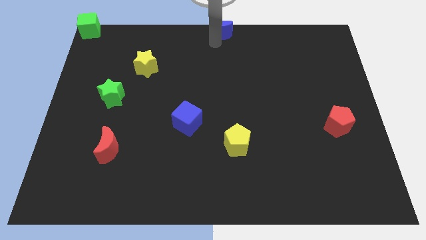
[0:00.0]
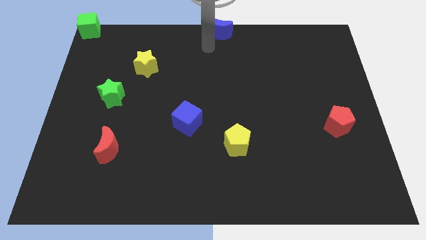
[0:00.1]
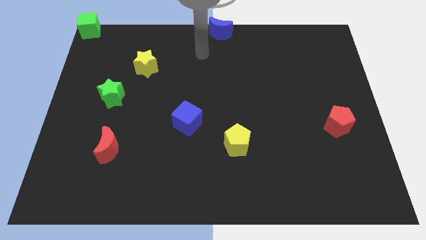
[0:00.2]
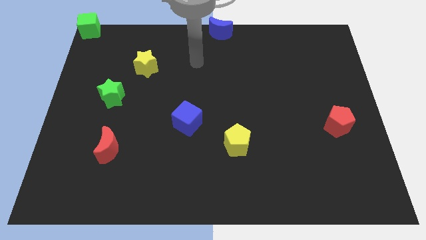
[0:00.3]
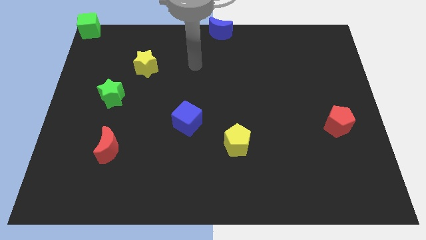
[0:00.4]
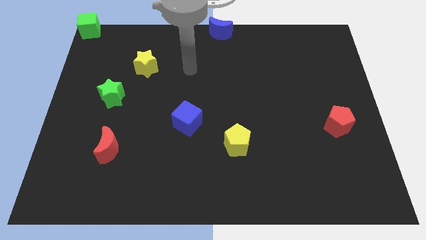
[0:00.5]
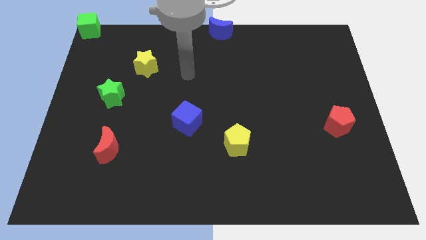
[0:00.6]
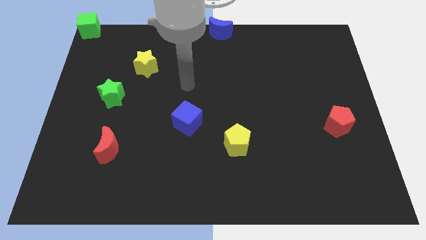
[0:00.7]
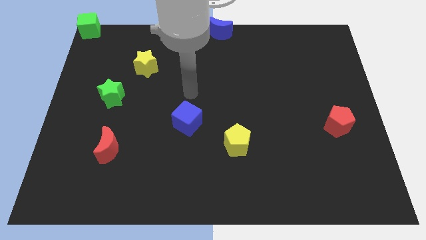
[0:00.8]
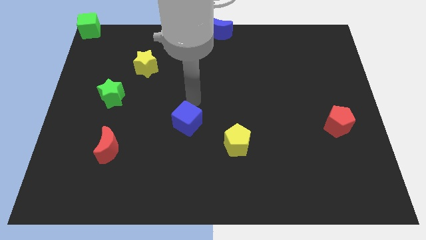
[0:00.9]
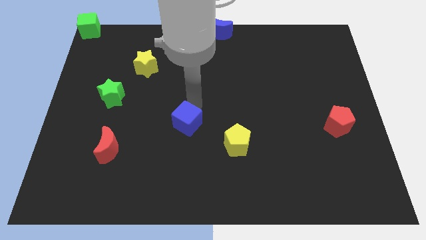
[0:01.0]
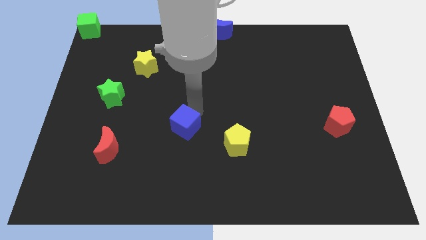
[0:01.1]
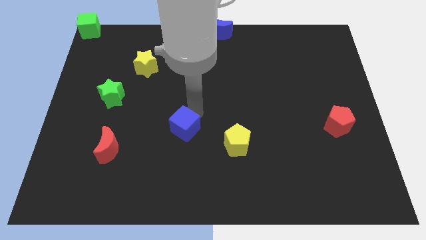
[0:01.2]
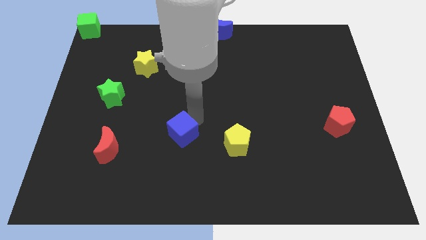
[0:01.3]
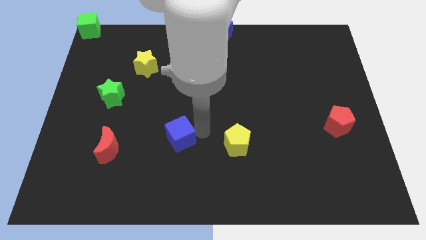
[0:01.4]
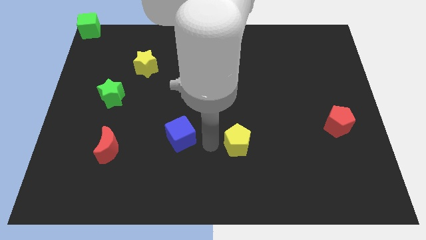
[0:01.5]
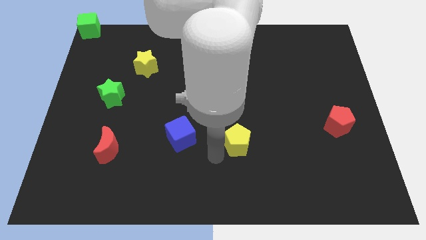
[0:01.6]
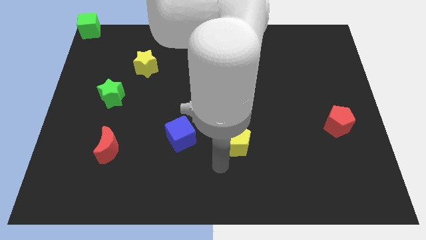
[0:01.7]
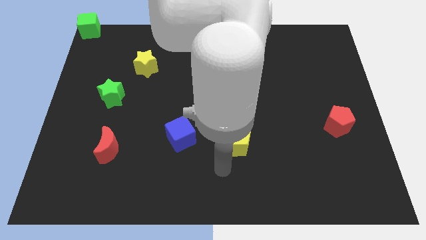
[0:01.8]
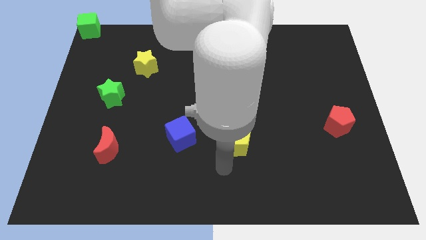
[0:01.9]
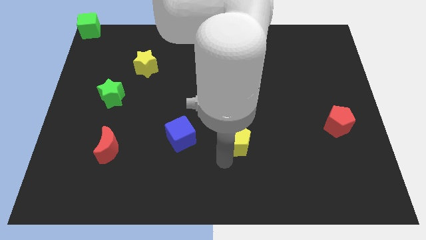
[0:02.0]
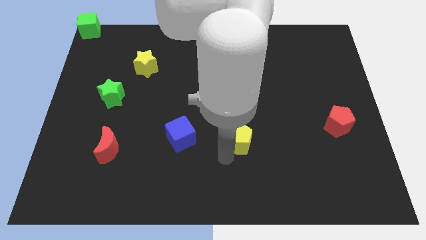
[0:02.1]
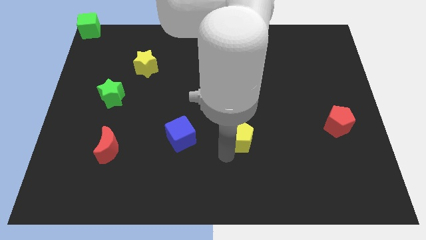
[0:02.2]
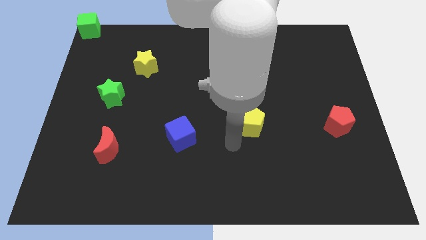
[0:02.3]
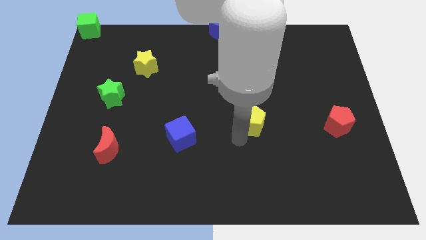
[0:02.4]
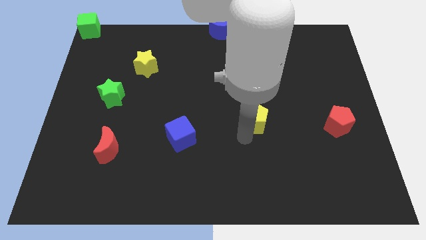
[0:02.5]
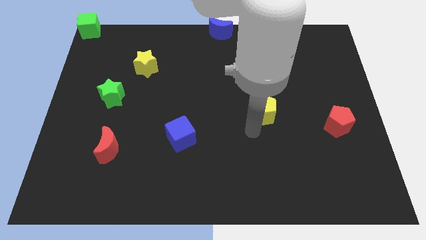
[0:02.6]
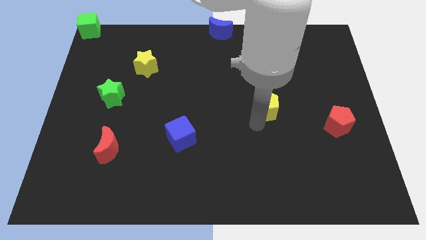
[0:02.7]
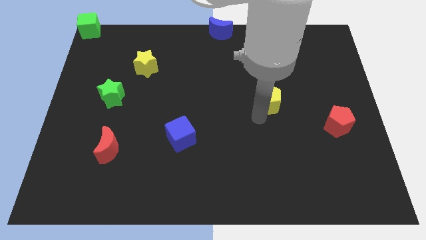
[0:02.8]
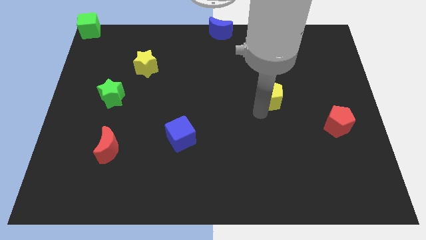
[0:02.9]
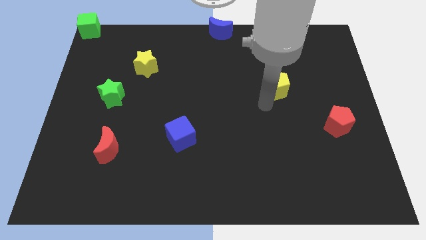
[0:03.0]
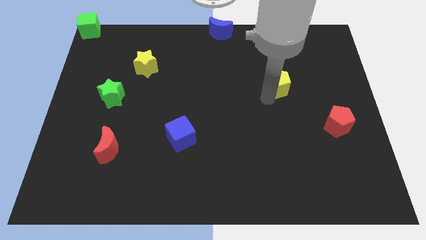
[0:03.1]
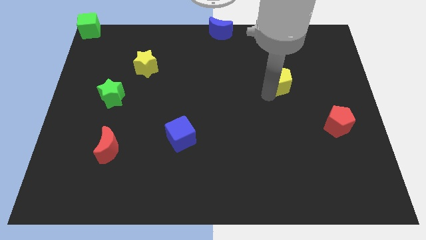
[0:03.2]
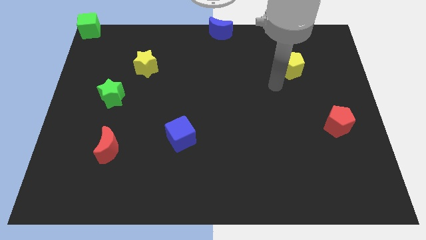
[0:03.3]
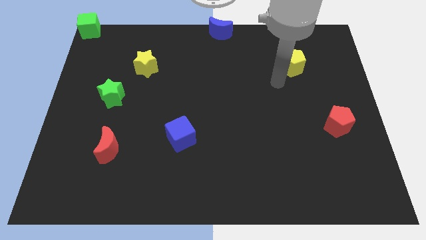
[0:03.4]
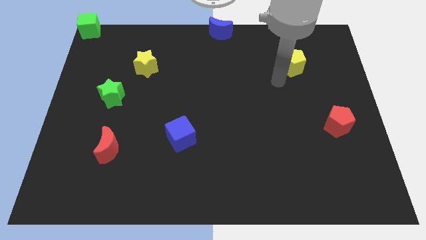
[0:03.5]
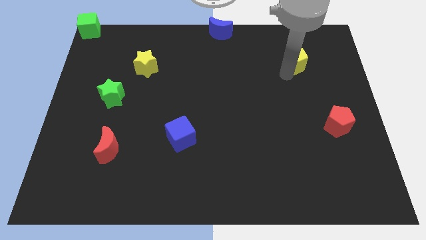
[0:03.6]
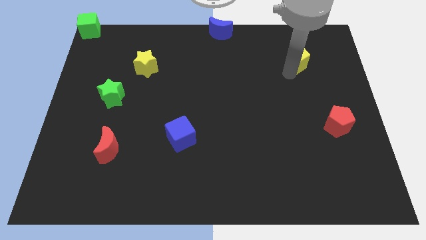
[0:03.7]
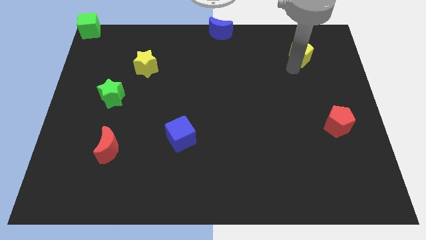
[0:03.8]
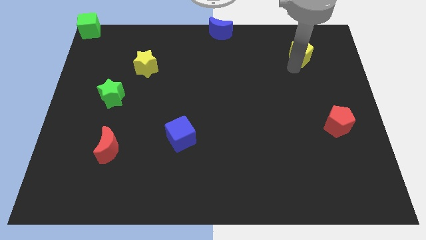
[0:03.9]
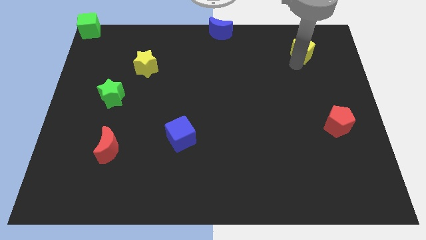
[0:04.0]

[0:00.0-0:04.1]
place the red pentagon diagonally on the top right side of the blue cube

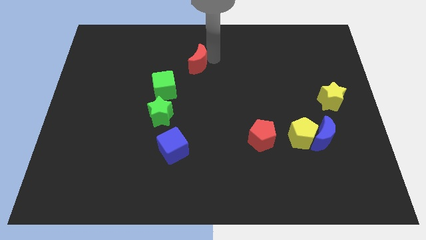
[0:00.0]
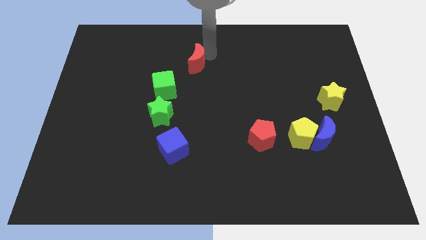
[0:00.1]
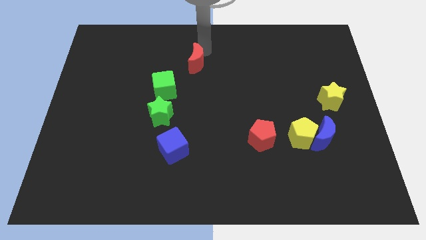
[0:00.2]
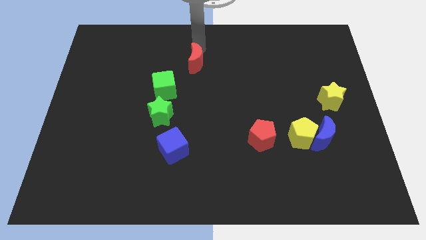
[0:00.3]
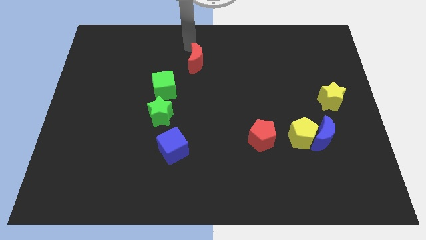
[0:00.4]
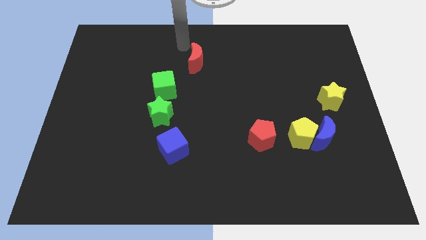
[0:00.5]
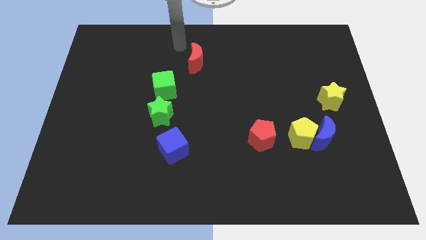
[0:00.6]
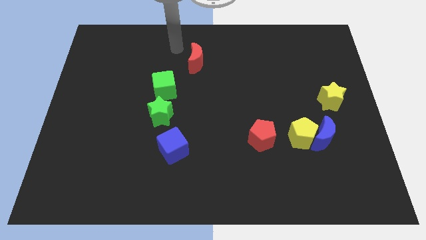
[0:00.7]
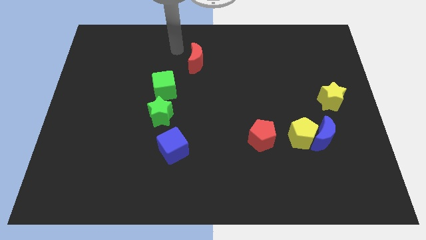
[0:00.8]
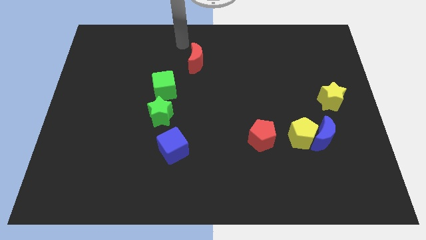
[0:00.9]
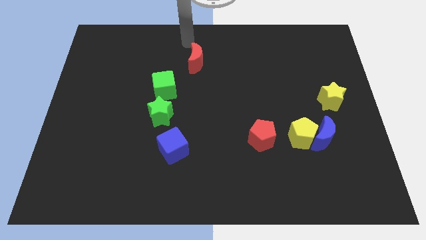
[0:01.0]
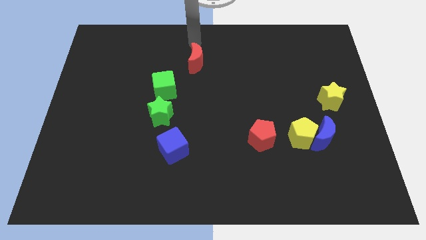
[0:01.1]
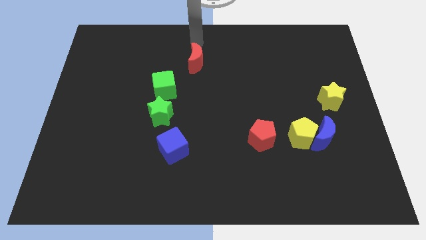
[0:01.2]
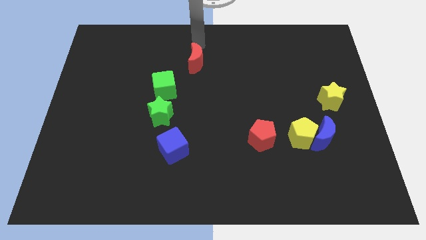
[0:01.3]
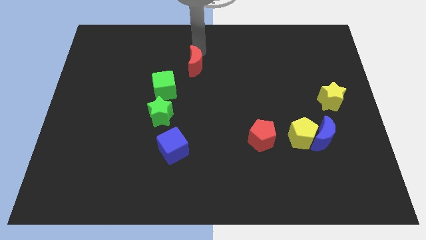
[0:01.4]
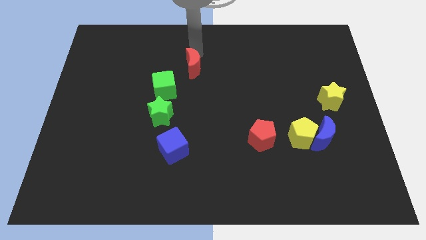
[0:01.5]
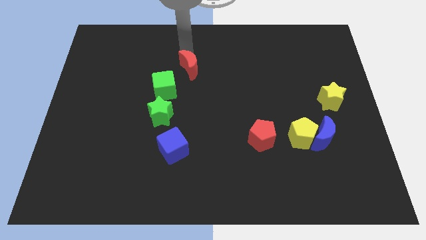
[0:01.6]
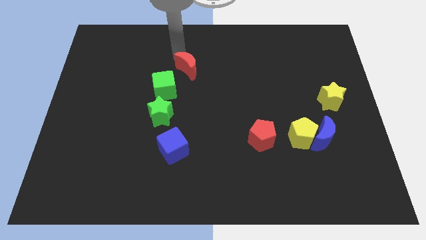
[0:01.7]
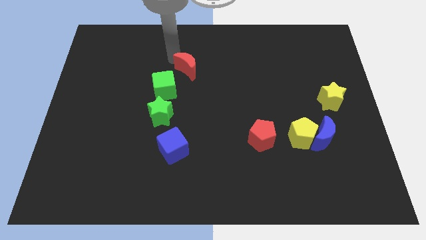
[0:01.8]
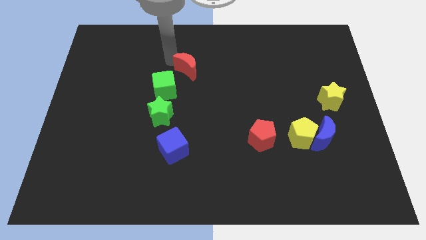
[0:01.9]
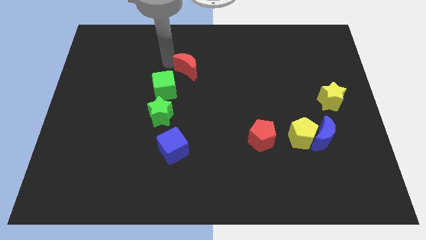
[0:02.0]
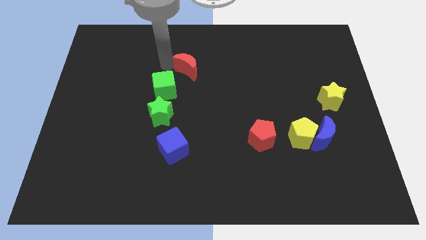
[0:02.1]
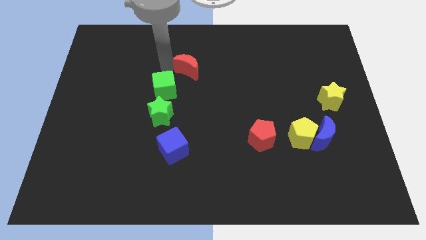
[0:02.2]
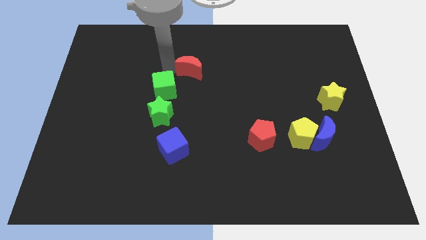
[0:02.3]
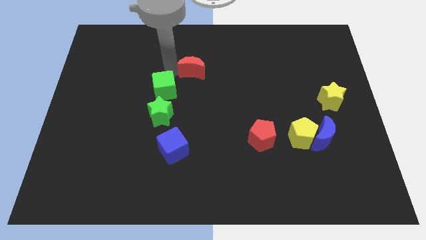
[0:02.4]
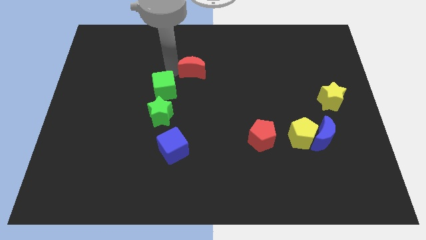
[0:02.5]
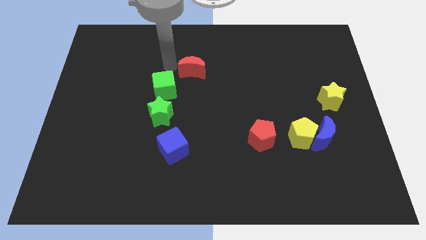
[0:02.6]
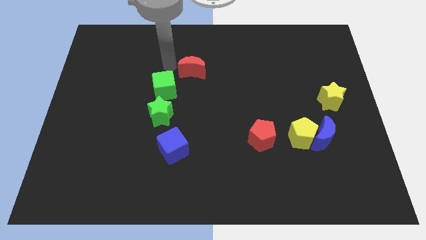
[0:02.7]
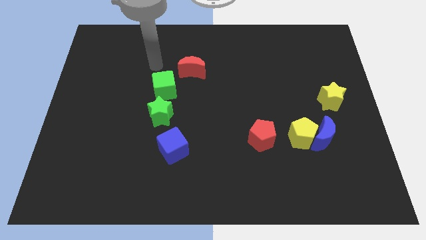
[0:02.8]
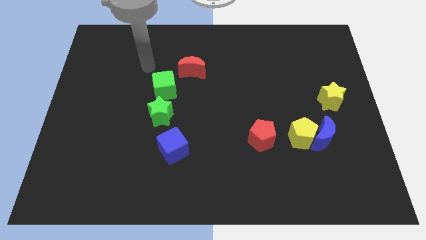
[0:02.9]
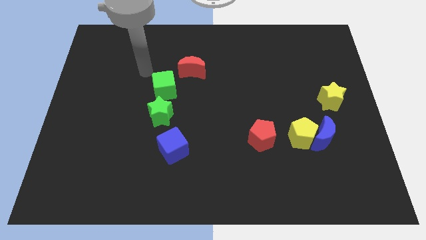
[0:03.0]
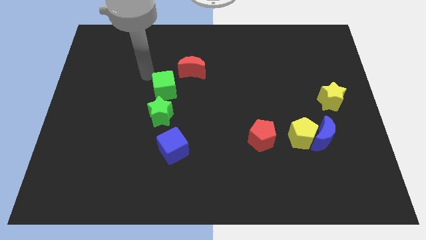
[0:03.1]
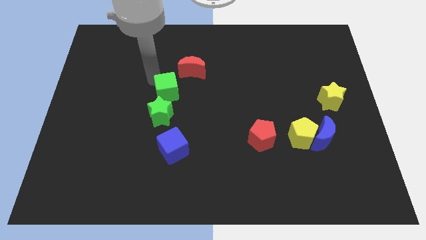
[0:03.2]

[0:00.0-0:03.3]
adjust red moon diagonal right to green cube

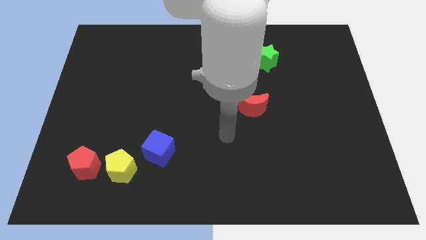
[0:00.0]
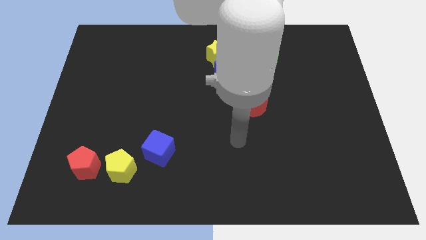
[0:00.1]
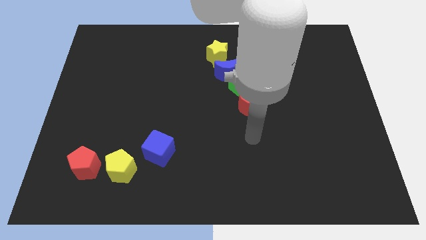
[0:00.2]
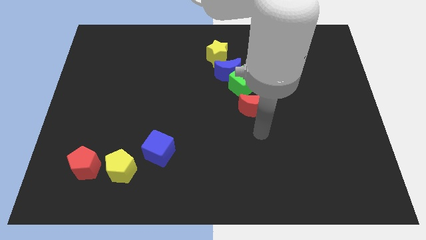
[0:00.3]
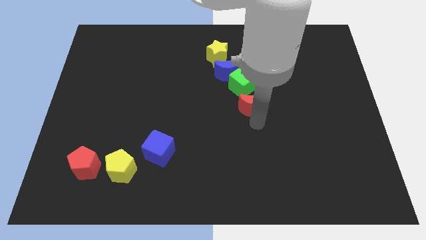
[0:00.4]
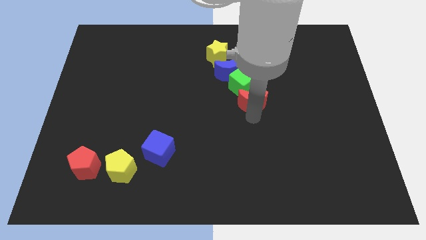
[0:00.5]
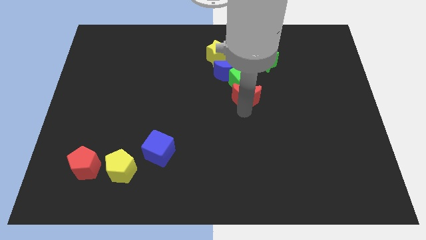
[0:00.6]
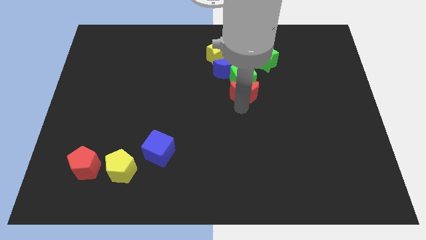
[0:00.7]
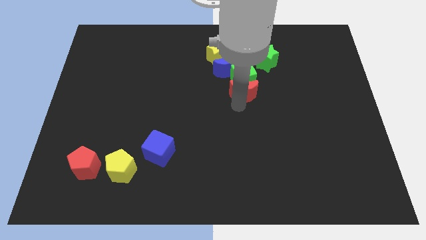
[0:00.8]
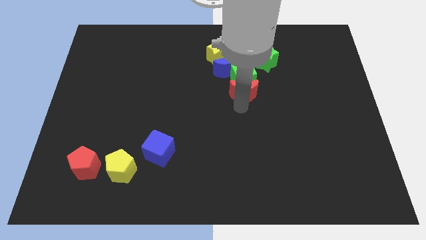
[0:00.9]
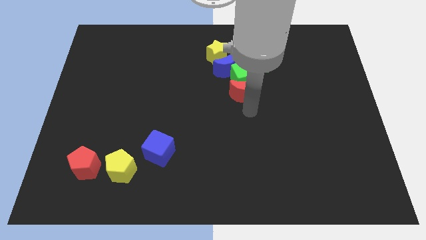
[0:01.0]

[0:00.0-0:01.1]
push the red moon into the green cube

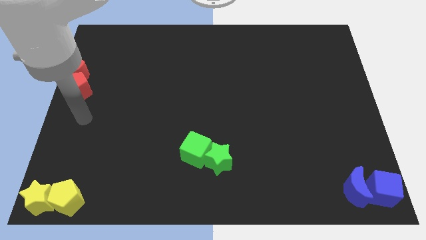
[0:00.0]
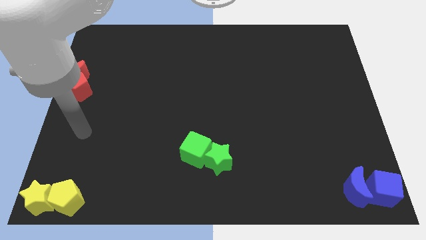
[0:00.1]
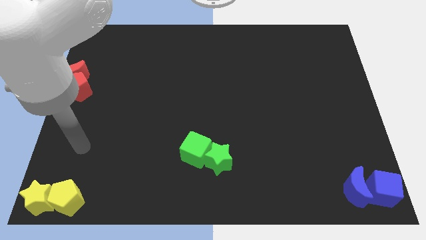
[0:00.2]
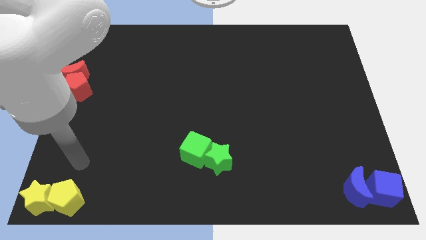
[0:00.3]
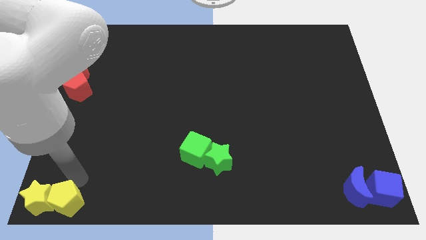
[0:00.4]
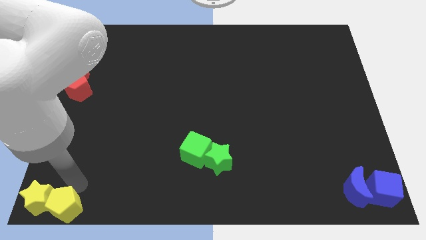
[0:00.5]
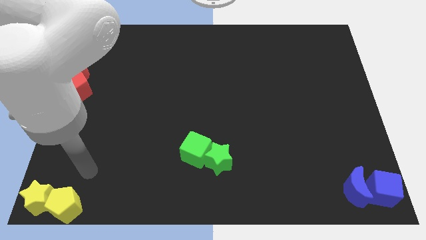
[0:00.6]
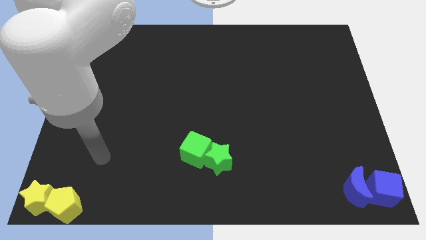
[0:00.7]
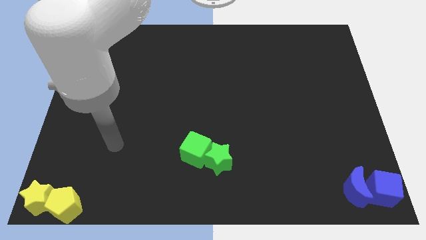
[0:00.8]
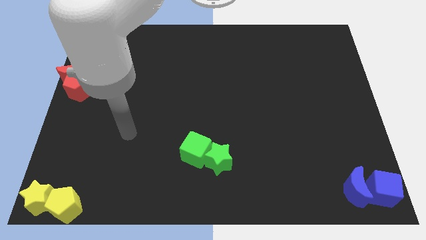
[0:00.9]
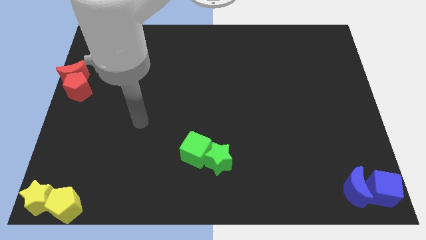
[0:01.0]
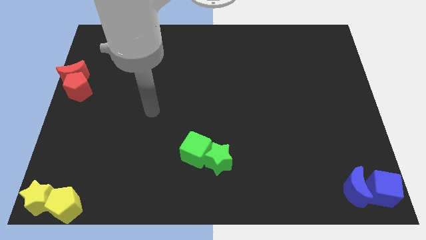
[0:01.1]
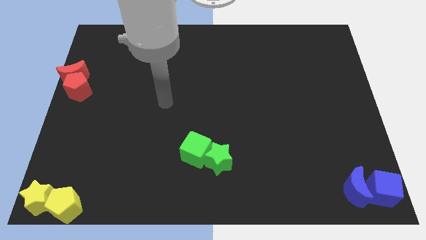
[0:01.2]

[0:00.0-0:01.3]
slightly push down the yellow pentagon
